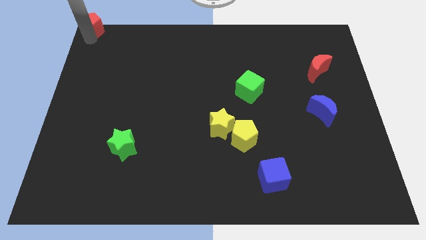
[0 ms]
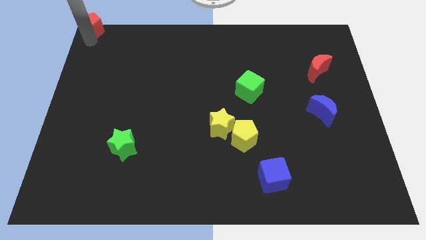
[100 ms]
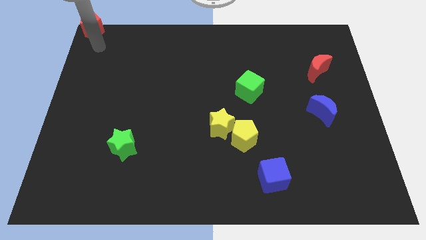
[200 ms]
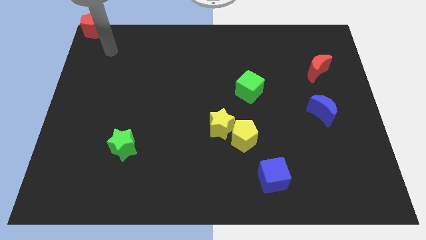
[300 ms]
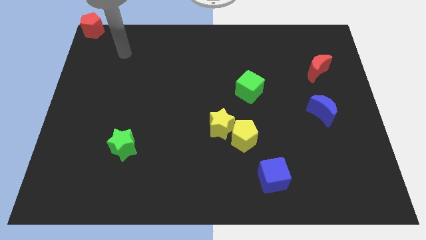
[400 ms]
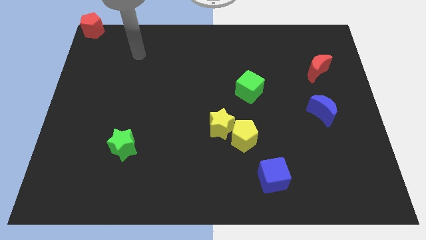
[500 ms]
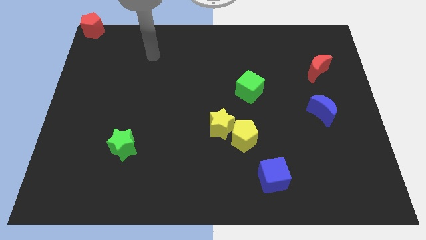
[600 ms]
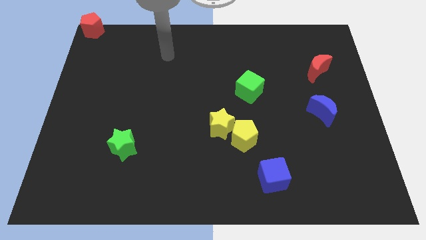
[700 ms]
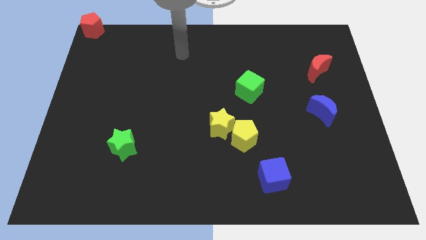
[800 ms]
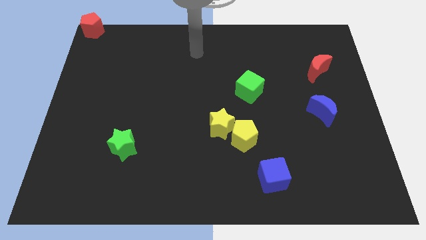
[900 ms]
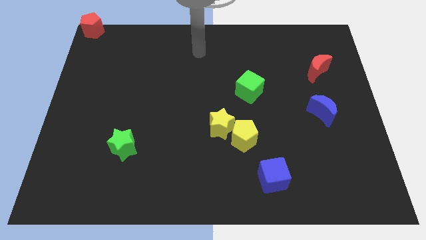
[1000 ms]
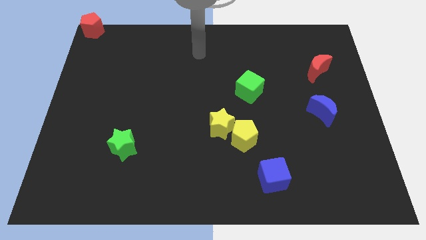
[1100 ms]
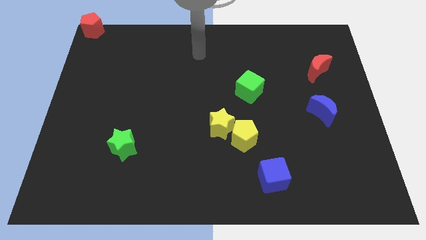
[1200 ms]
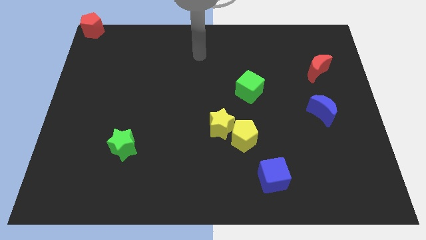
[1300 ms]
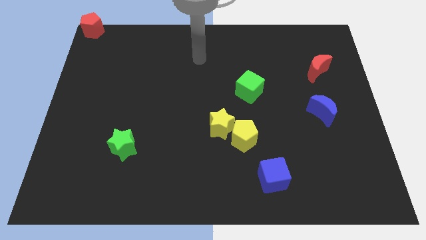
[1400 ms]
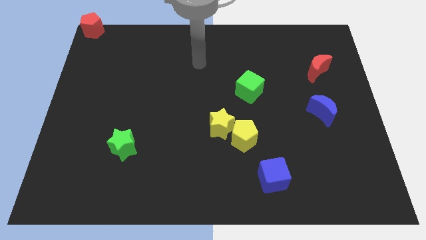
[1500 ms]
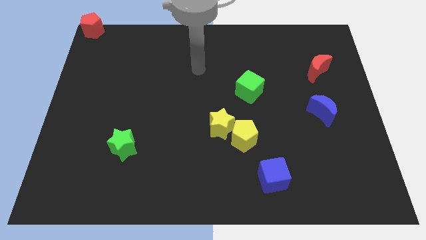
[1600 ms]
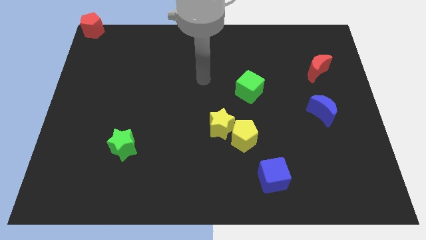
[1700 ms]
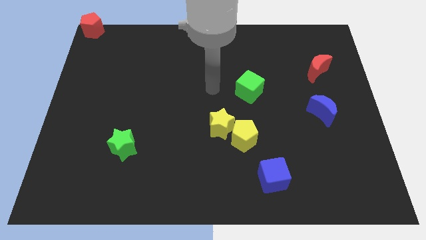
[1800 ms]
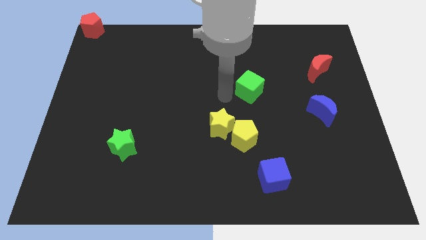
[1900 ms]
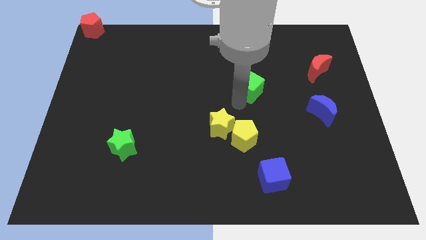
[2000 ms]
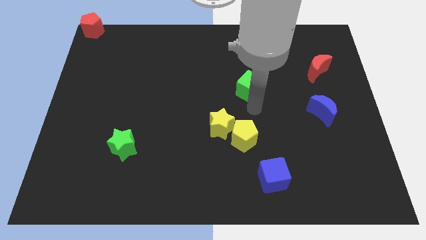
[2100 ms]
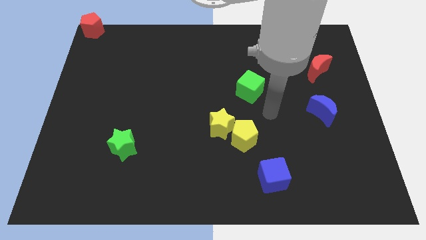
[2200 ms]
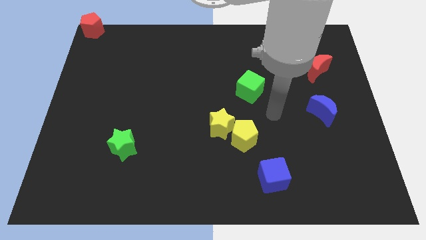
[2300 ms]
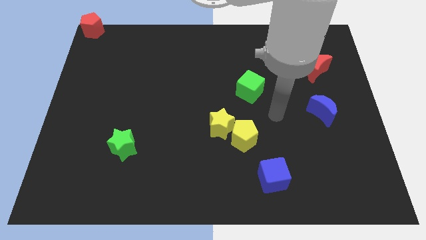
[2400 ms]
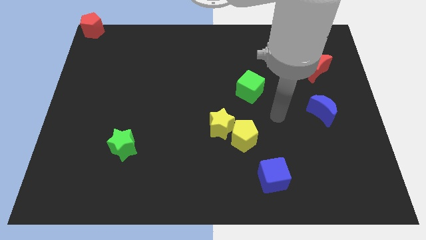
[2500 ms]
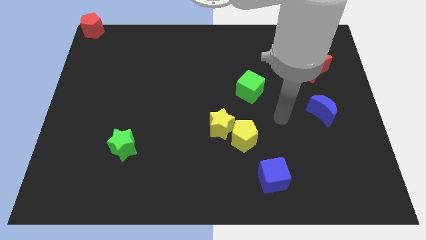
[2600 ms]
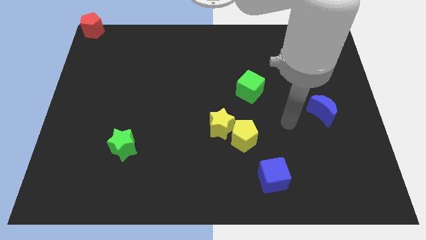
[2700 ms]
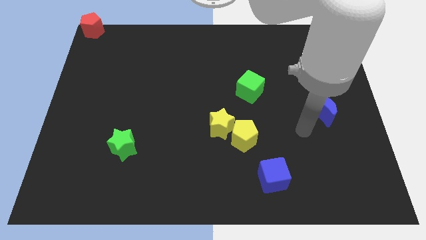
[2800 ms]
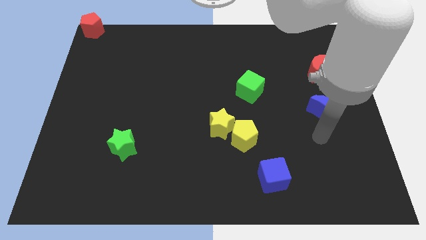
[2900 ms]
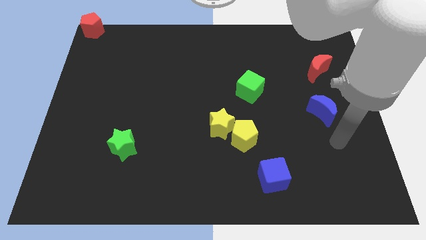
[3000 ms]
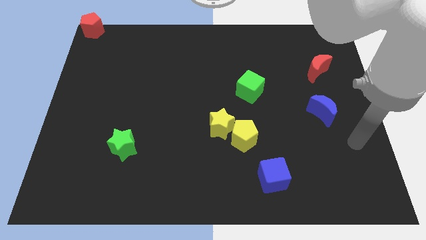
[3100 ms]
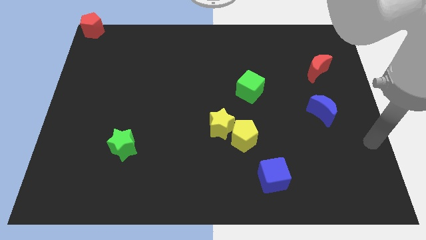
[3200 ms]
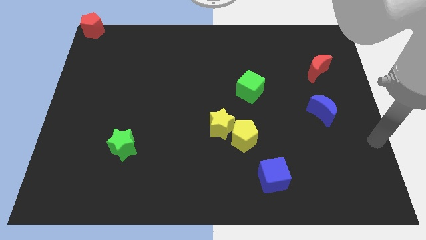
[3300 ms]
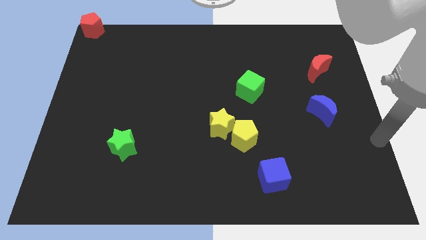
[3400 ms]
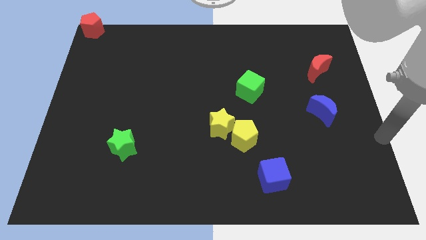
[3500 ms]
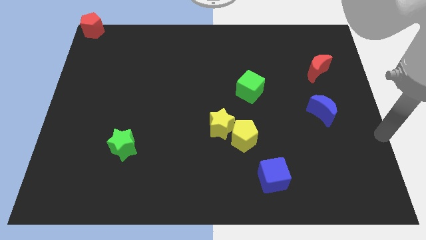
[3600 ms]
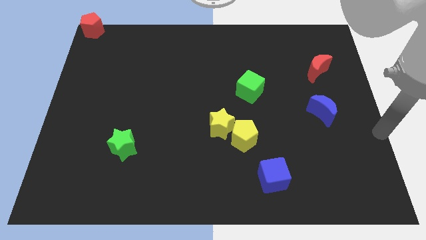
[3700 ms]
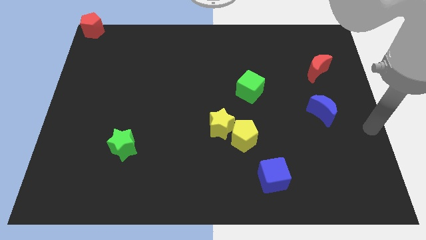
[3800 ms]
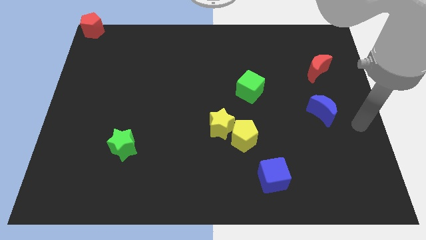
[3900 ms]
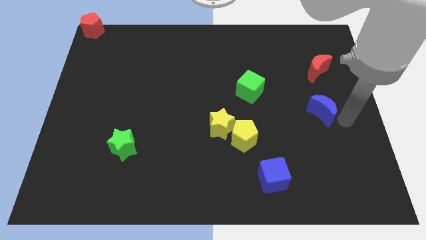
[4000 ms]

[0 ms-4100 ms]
place your arm close to blue moon

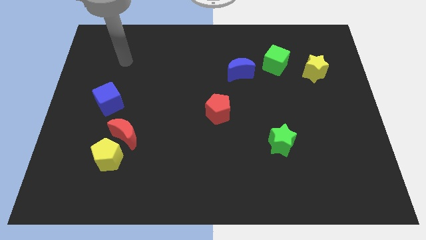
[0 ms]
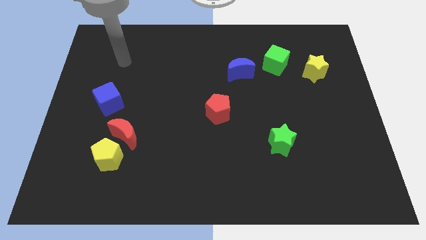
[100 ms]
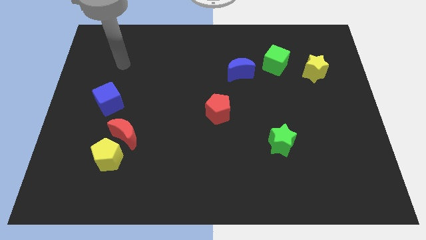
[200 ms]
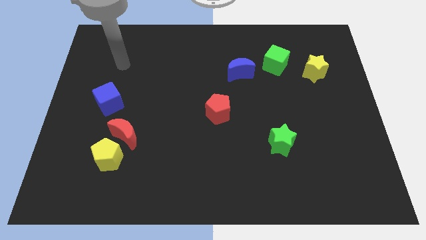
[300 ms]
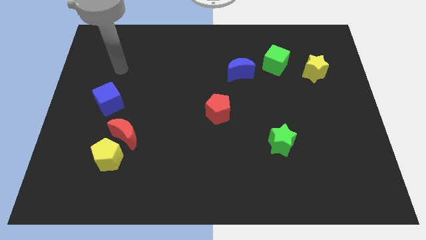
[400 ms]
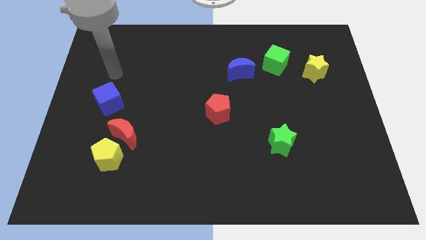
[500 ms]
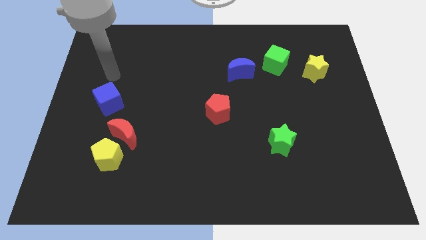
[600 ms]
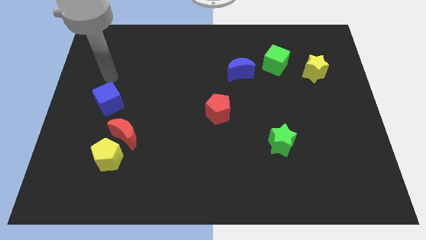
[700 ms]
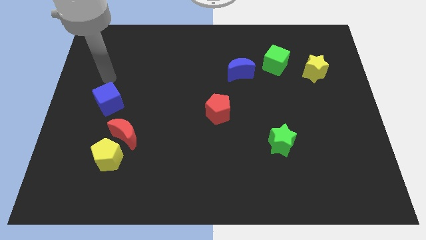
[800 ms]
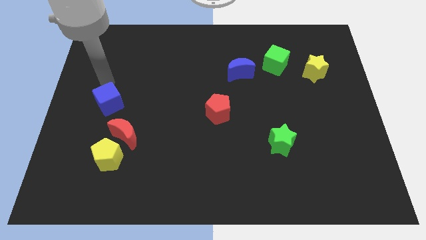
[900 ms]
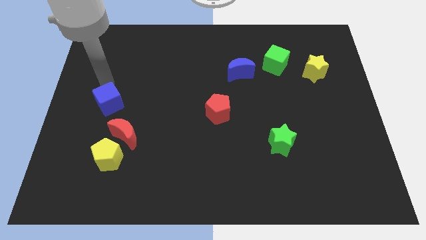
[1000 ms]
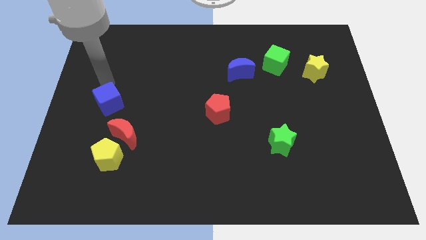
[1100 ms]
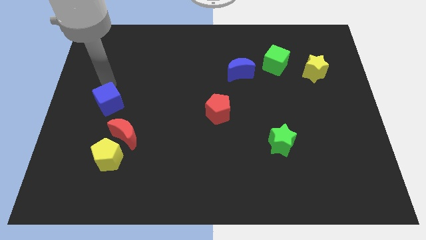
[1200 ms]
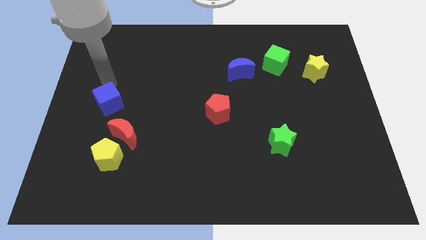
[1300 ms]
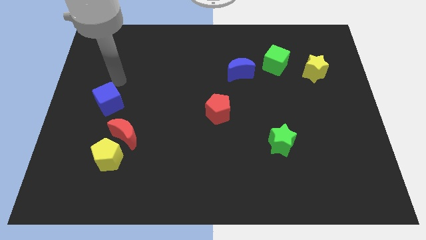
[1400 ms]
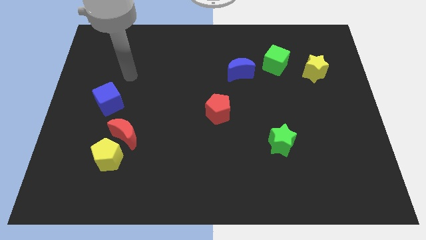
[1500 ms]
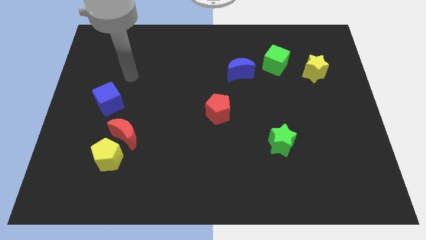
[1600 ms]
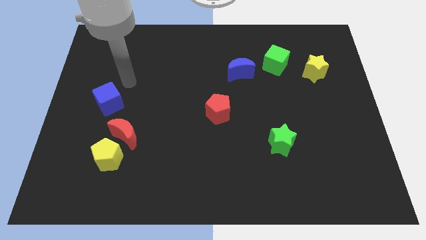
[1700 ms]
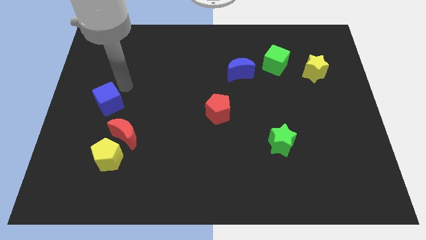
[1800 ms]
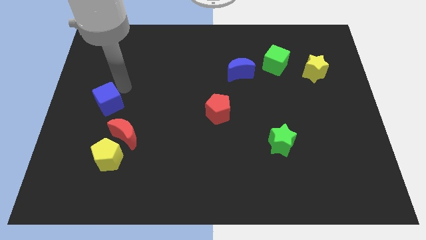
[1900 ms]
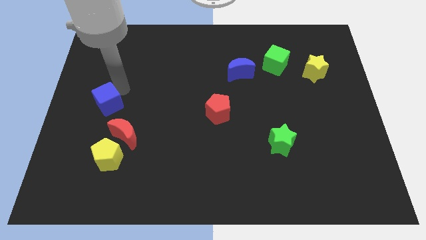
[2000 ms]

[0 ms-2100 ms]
move the arm towards the blue cube

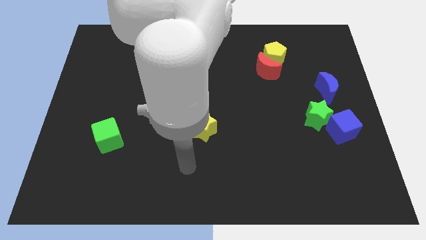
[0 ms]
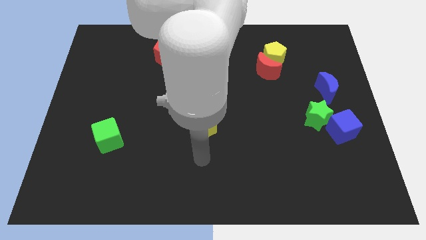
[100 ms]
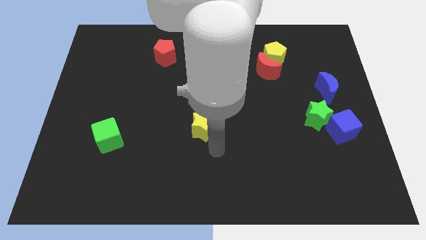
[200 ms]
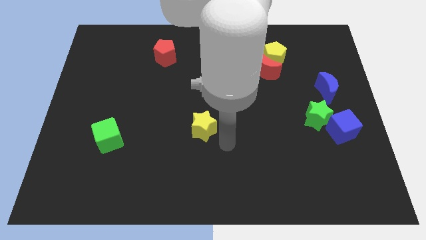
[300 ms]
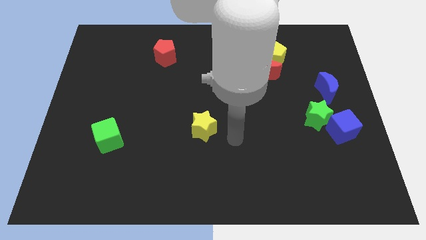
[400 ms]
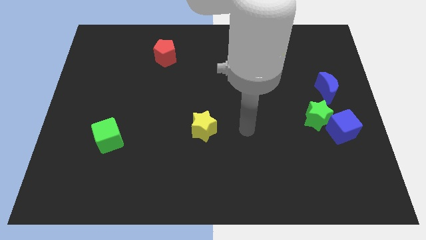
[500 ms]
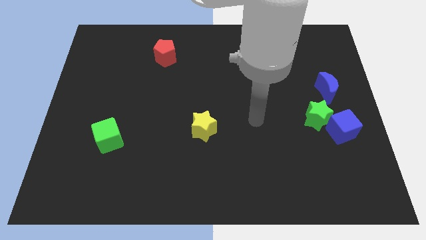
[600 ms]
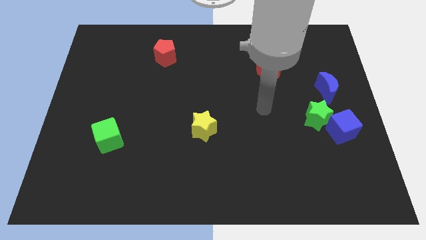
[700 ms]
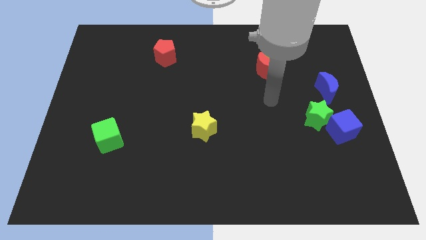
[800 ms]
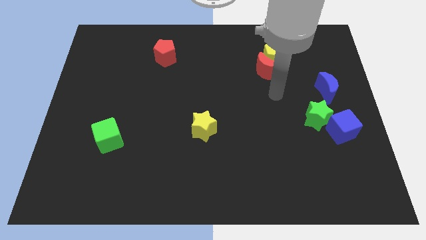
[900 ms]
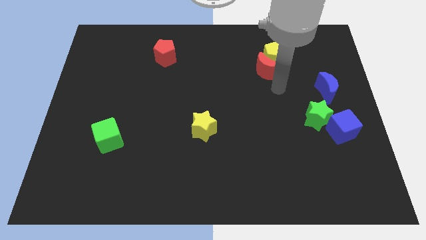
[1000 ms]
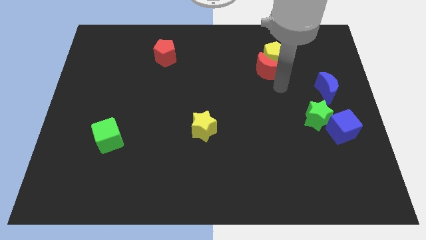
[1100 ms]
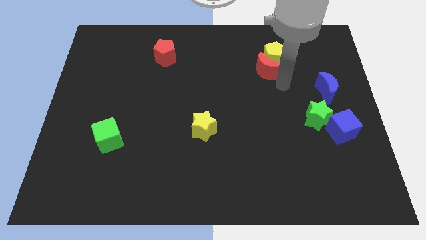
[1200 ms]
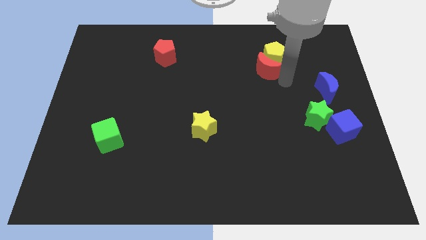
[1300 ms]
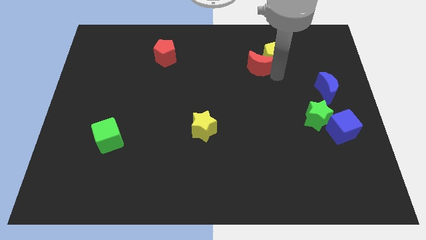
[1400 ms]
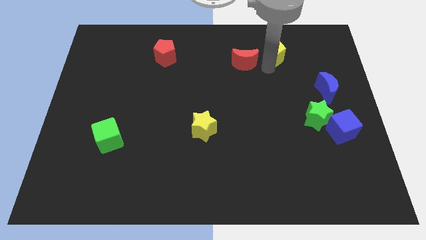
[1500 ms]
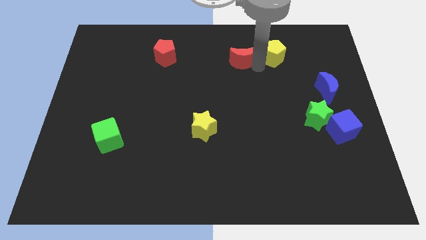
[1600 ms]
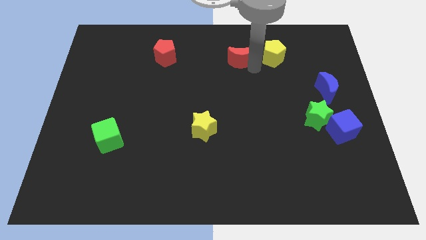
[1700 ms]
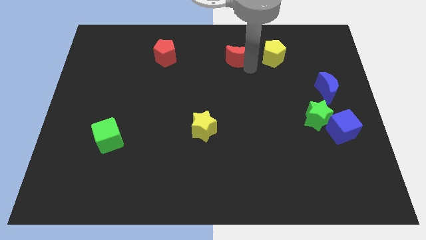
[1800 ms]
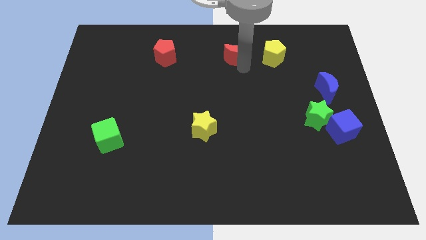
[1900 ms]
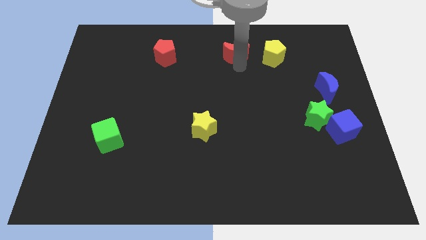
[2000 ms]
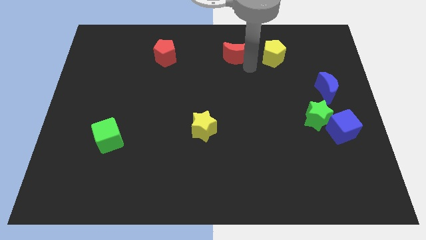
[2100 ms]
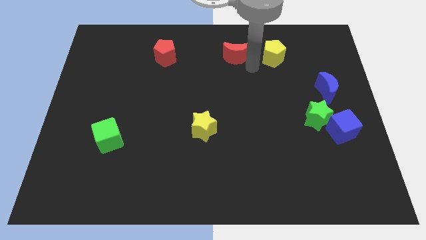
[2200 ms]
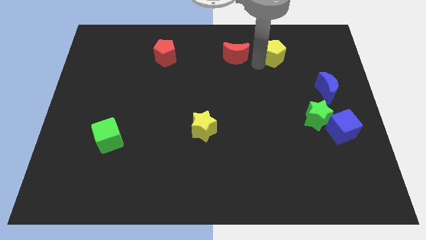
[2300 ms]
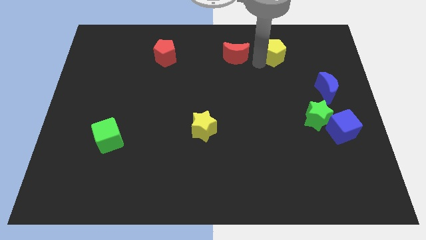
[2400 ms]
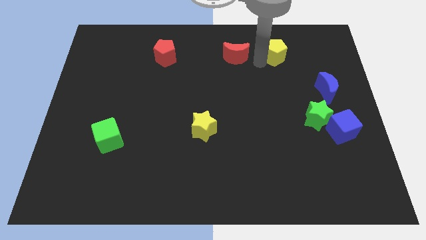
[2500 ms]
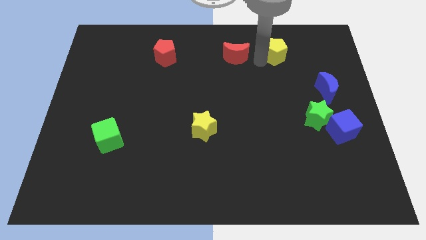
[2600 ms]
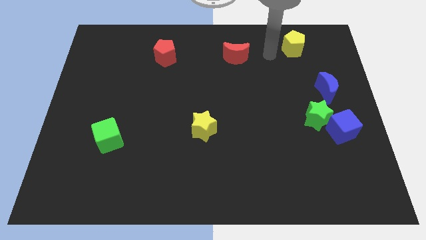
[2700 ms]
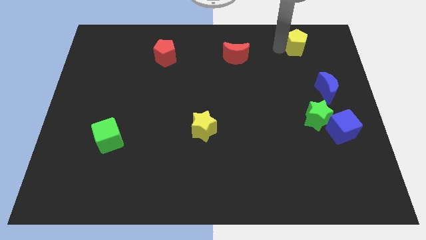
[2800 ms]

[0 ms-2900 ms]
place the red moon in between the yellow pentagon and the red pentagon
